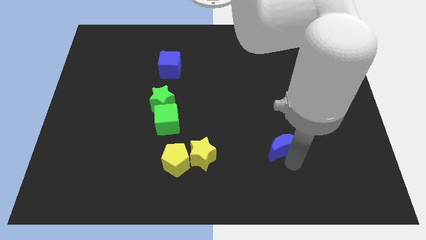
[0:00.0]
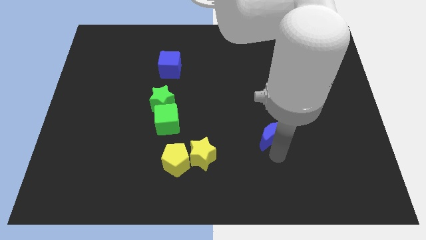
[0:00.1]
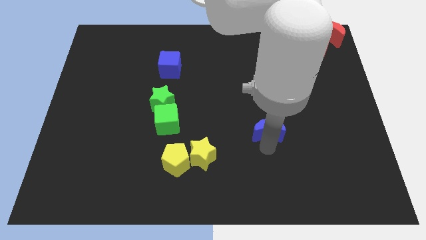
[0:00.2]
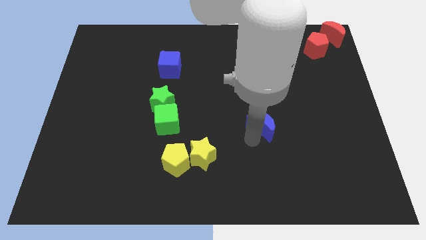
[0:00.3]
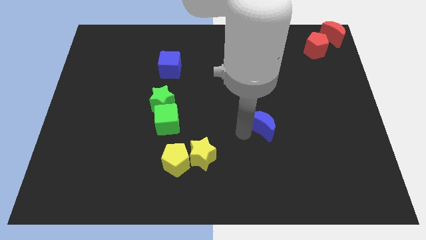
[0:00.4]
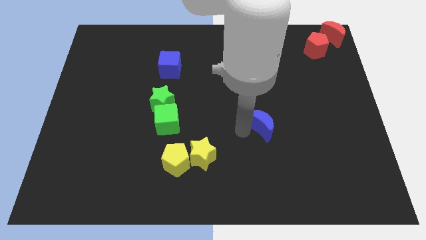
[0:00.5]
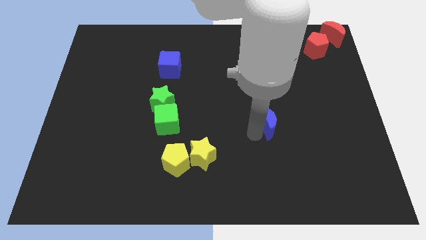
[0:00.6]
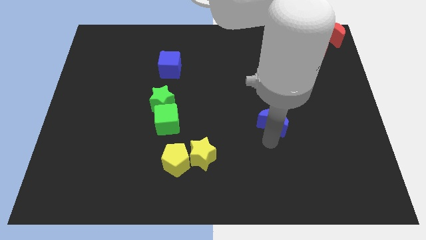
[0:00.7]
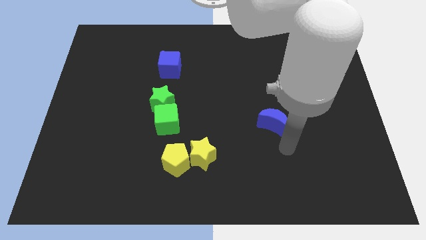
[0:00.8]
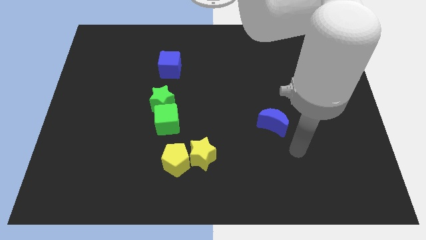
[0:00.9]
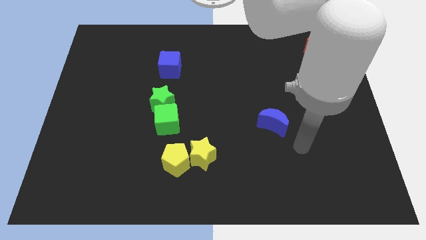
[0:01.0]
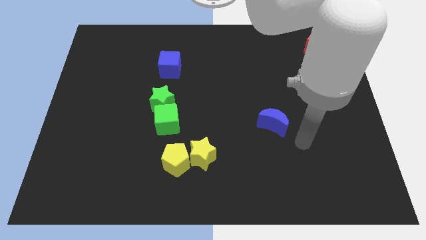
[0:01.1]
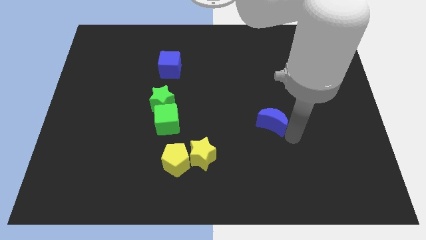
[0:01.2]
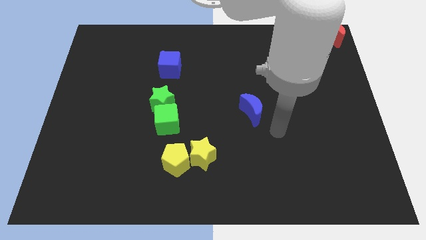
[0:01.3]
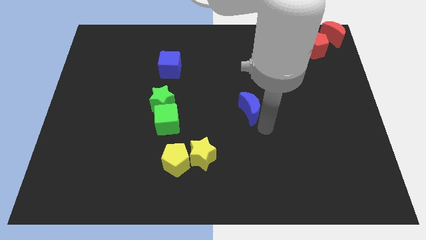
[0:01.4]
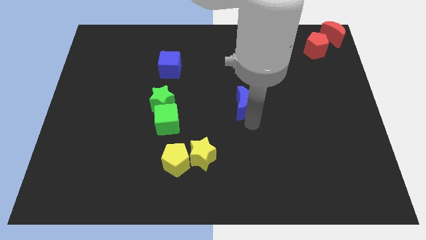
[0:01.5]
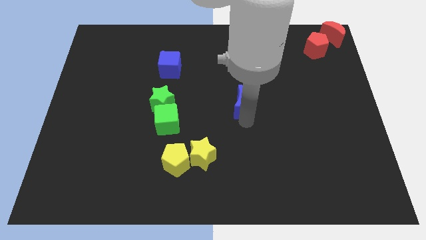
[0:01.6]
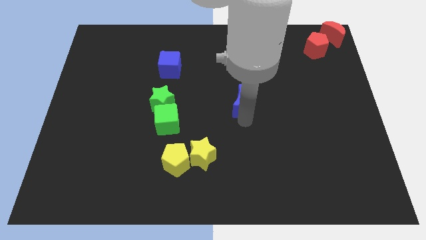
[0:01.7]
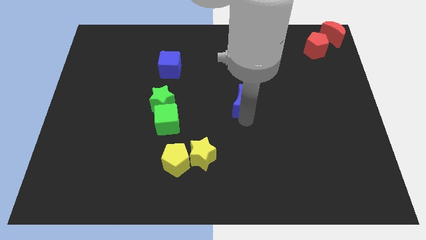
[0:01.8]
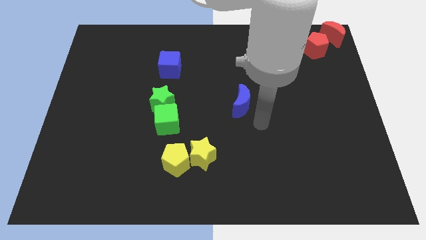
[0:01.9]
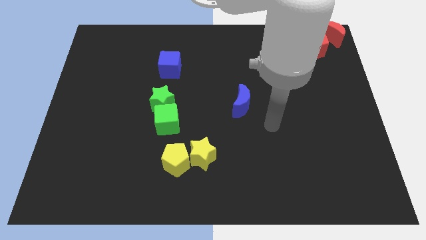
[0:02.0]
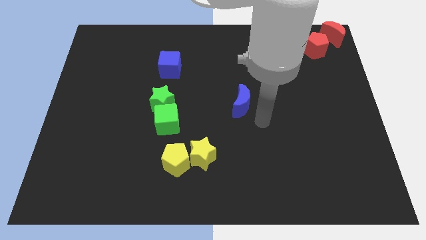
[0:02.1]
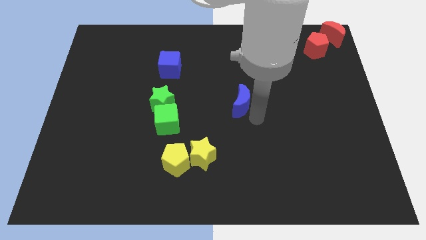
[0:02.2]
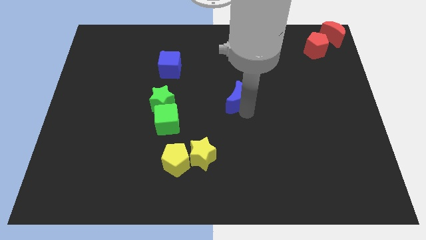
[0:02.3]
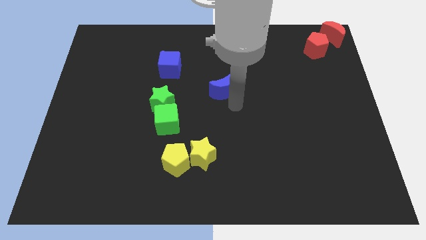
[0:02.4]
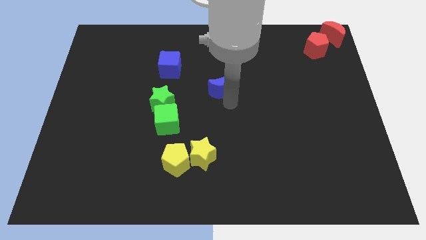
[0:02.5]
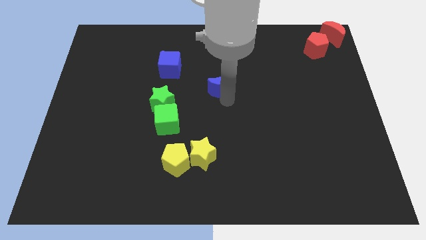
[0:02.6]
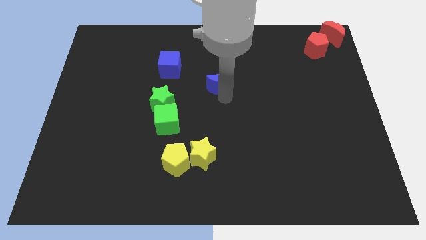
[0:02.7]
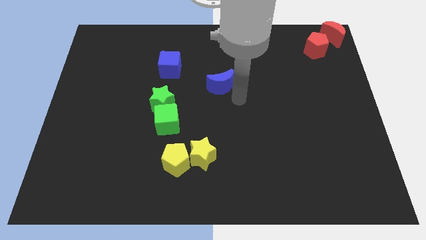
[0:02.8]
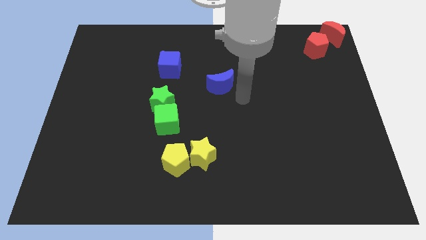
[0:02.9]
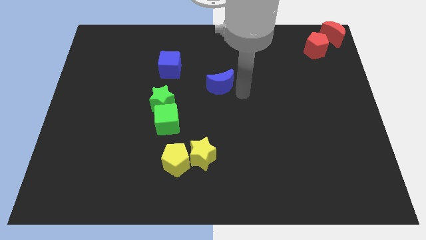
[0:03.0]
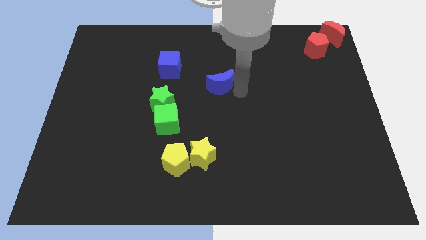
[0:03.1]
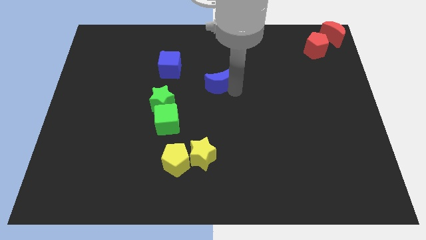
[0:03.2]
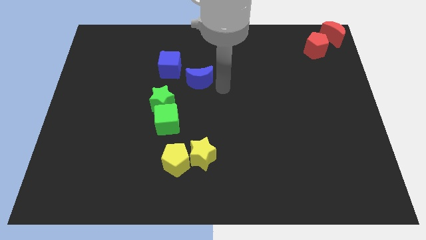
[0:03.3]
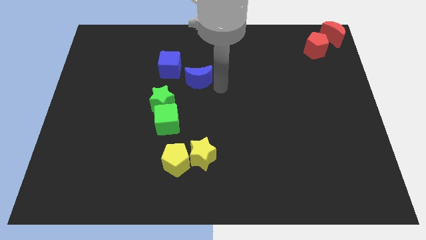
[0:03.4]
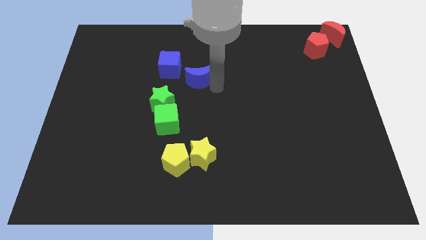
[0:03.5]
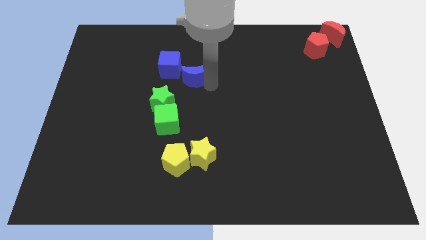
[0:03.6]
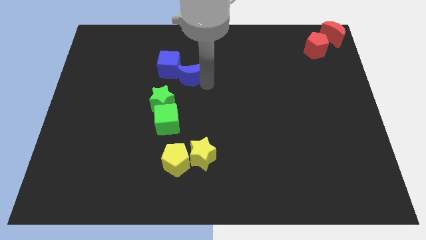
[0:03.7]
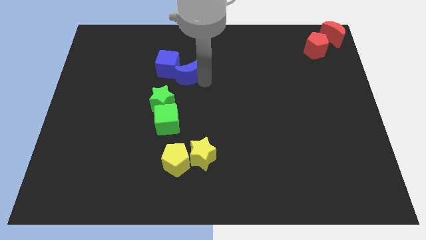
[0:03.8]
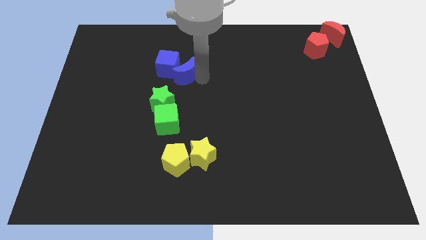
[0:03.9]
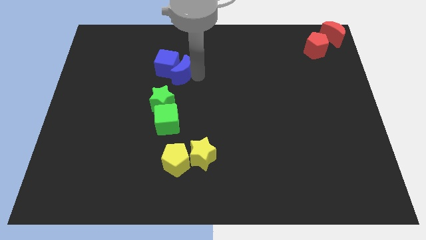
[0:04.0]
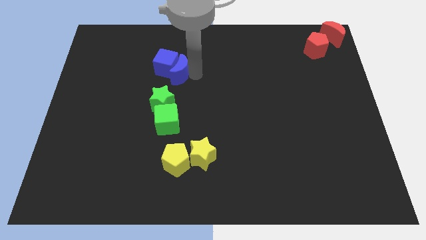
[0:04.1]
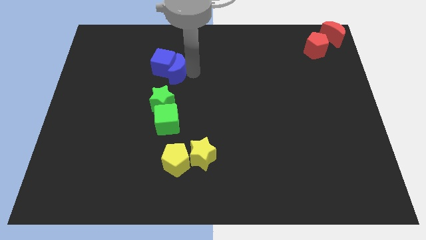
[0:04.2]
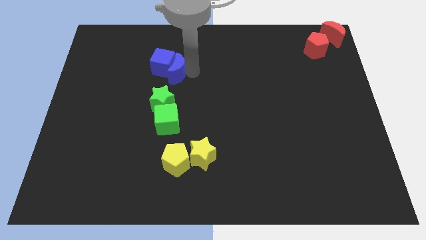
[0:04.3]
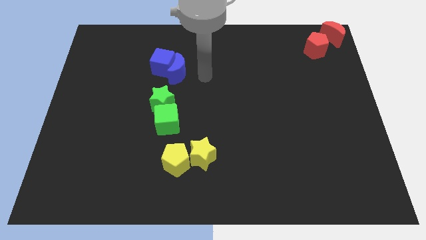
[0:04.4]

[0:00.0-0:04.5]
push the blue crescent to the right of the blue cube

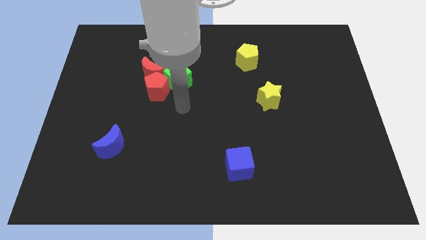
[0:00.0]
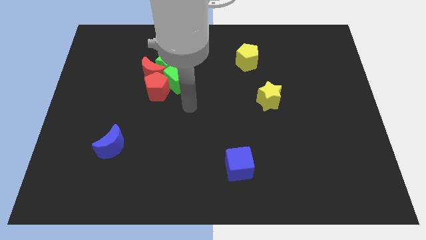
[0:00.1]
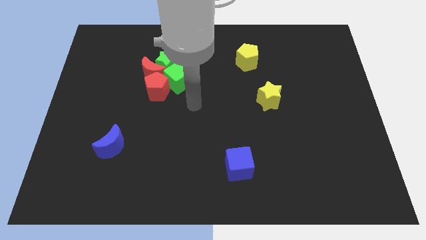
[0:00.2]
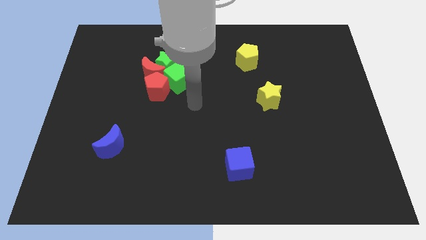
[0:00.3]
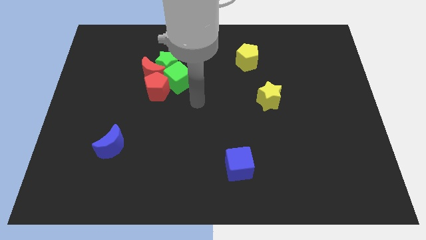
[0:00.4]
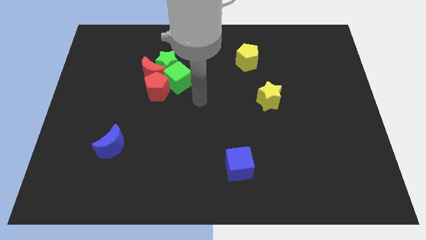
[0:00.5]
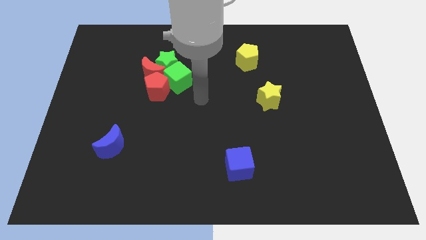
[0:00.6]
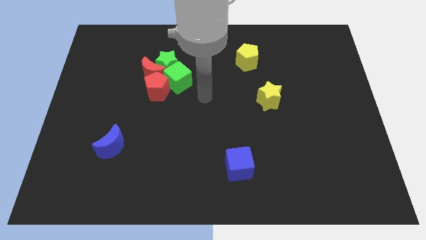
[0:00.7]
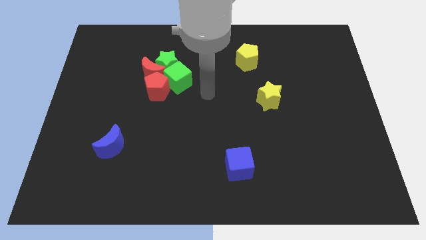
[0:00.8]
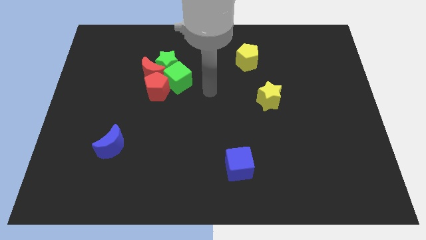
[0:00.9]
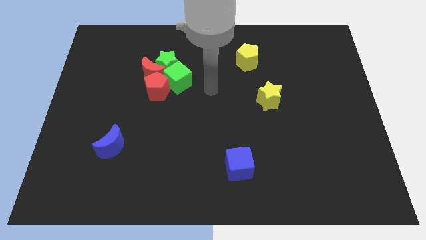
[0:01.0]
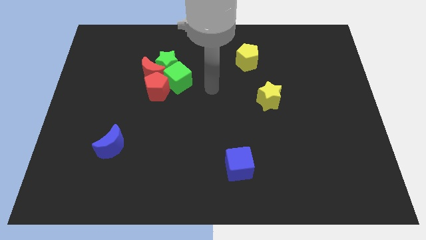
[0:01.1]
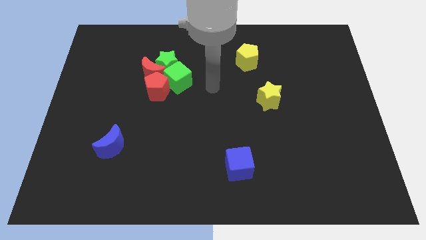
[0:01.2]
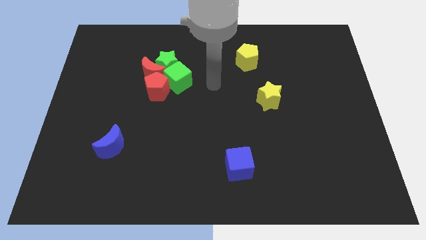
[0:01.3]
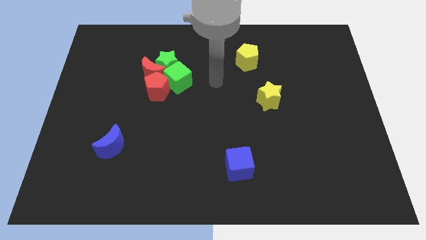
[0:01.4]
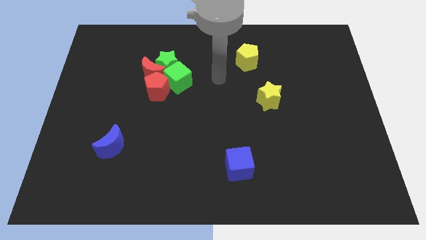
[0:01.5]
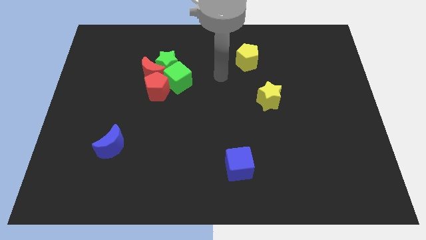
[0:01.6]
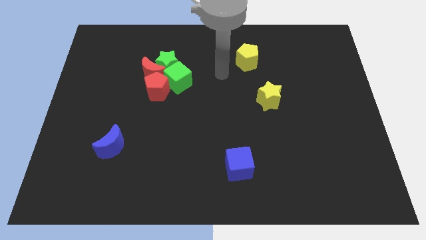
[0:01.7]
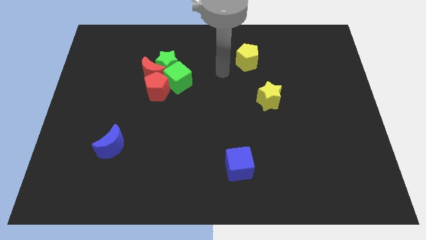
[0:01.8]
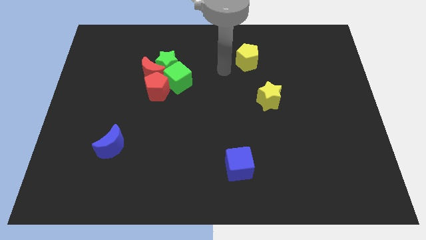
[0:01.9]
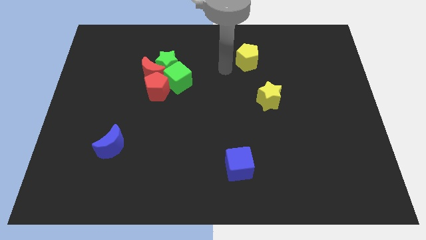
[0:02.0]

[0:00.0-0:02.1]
place the arm in between green cube and yellow pentagon

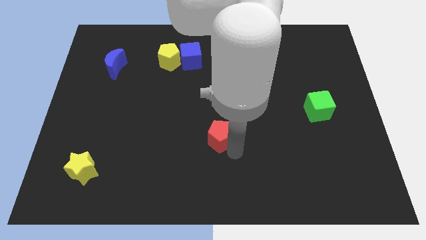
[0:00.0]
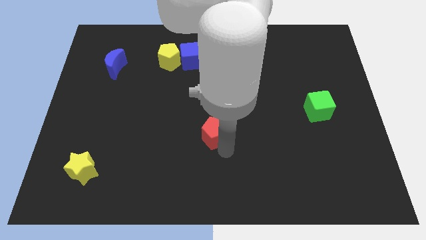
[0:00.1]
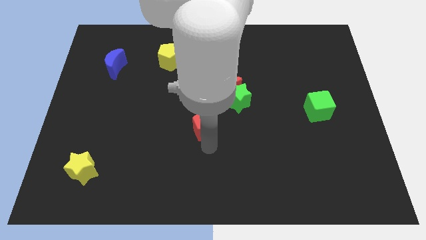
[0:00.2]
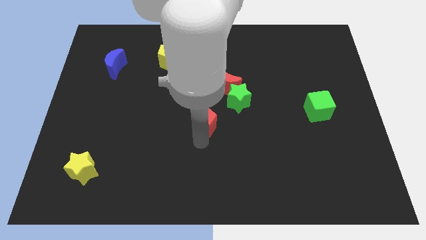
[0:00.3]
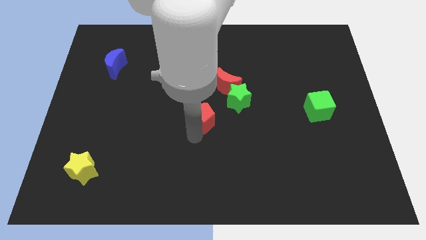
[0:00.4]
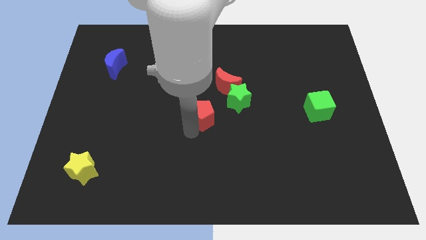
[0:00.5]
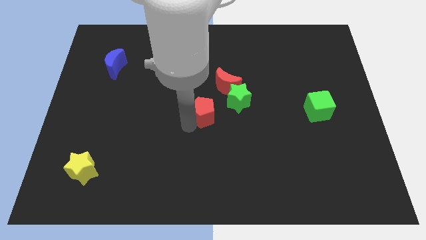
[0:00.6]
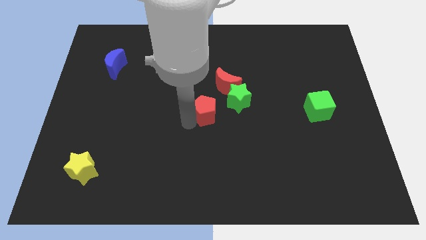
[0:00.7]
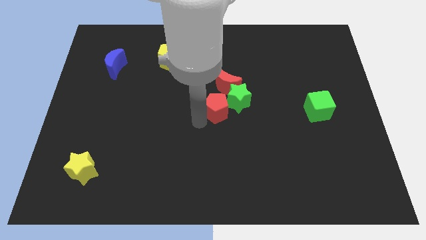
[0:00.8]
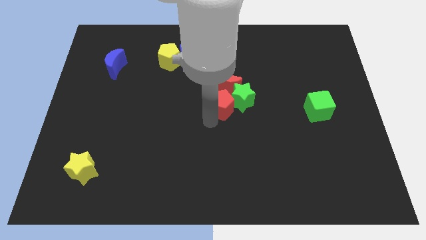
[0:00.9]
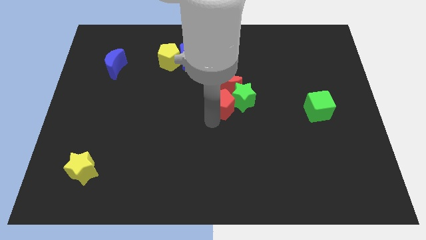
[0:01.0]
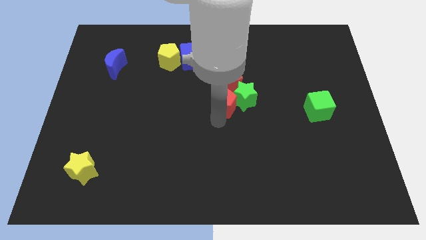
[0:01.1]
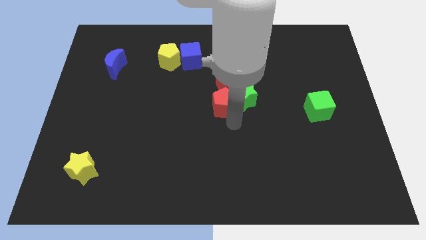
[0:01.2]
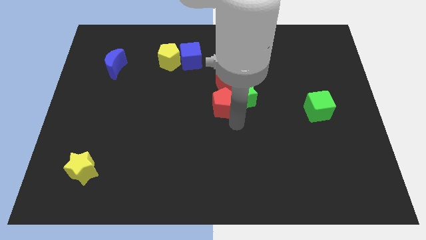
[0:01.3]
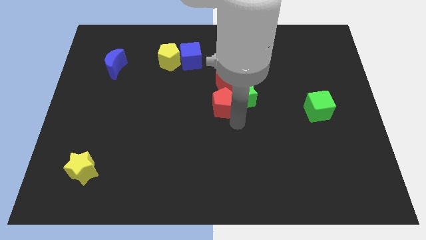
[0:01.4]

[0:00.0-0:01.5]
push the red pentagon into the green star

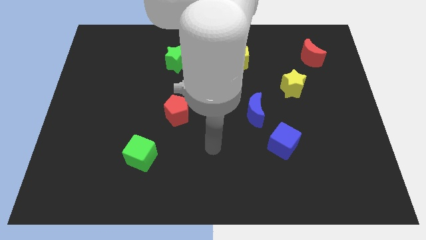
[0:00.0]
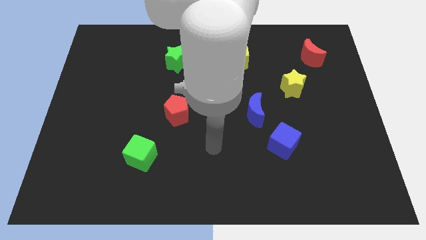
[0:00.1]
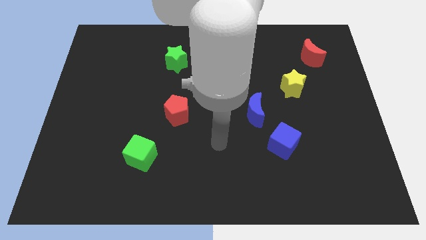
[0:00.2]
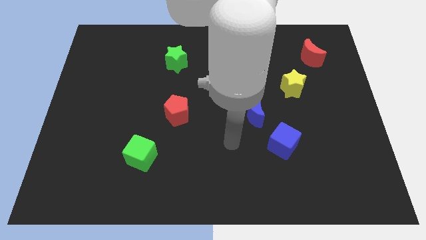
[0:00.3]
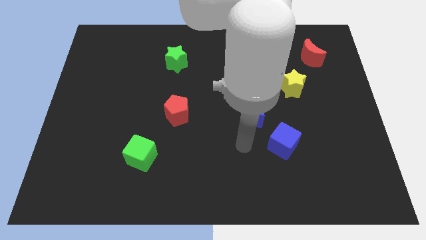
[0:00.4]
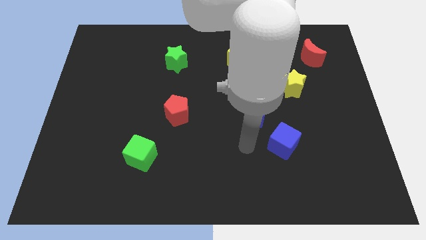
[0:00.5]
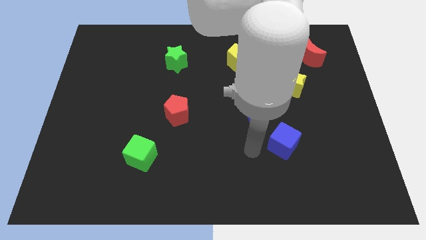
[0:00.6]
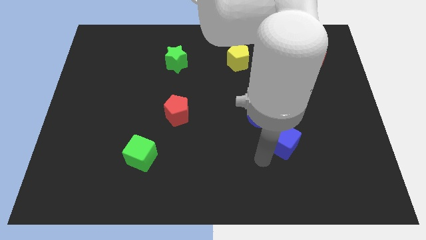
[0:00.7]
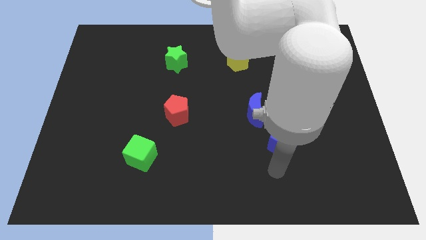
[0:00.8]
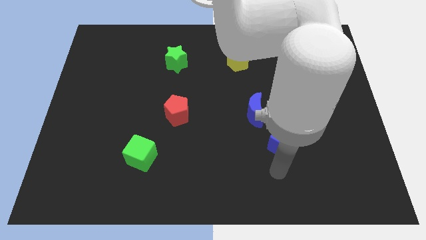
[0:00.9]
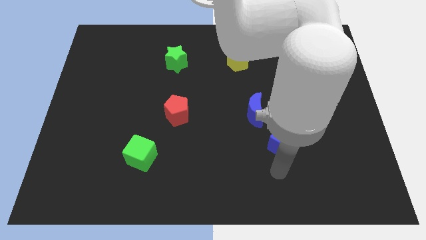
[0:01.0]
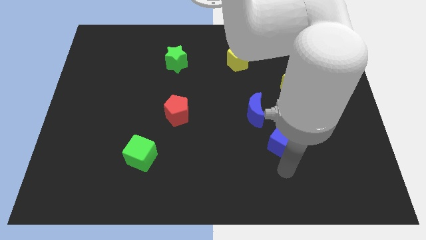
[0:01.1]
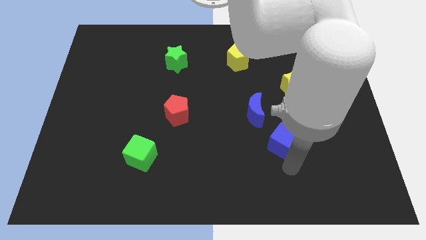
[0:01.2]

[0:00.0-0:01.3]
move arm towards blue cube
